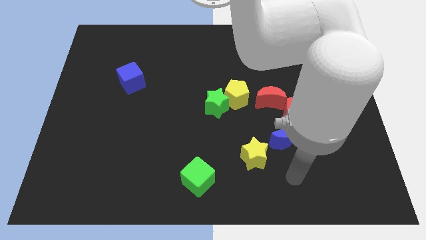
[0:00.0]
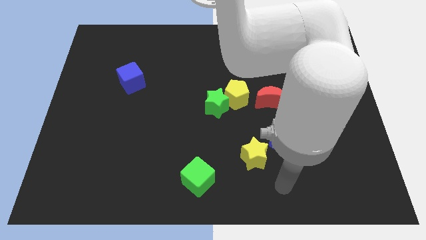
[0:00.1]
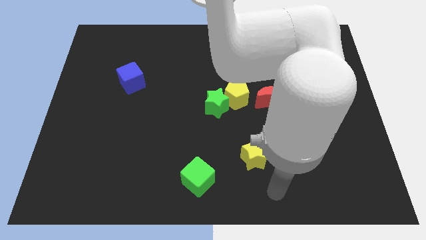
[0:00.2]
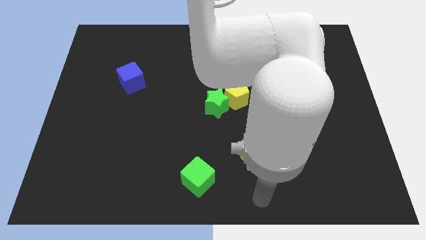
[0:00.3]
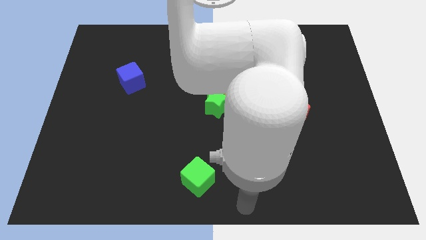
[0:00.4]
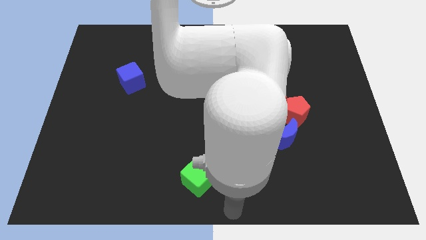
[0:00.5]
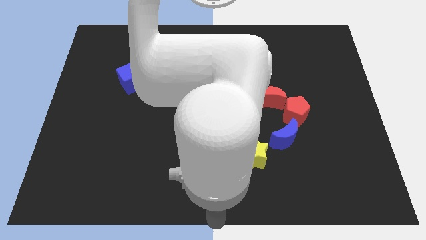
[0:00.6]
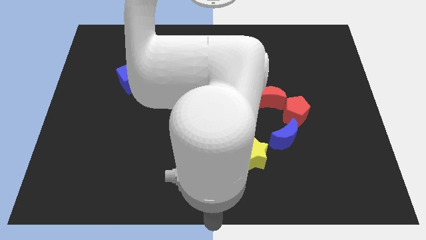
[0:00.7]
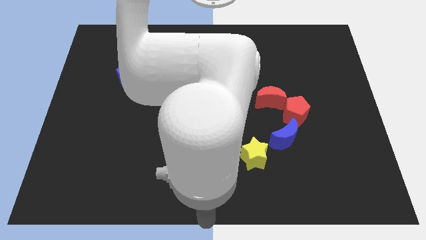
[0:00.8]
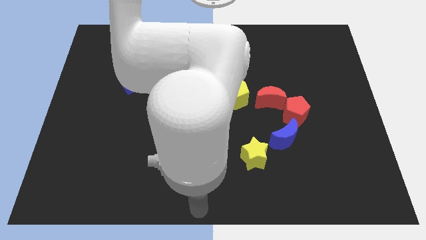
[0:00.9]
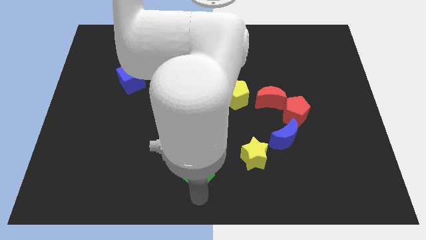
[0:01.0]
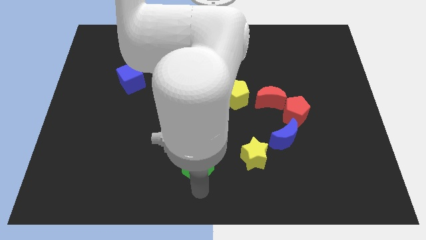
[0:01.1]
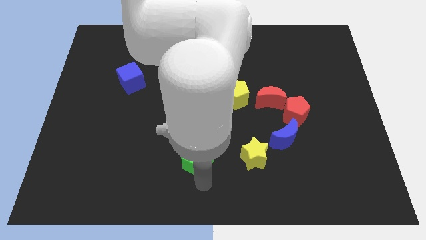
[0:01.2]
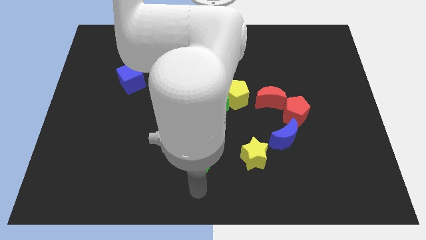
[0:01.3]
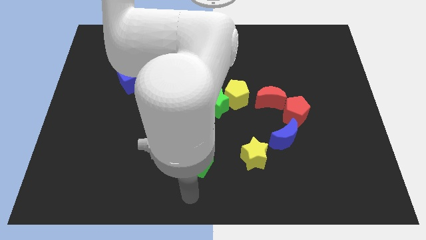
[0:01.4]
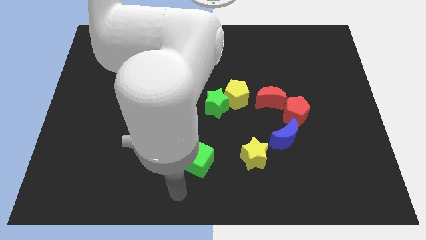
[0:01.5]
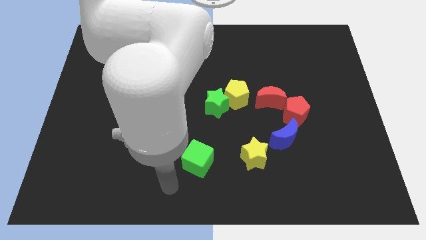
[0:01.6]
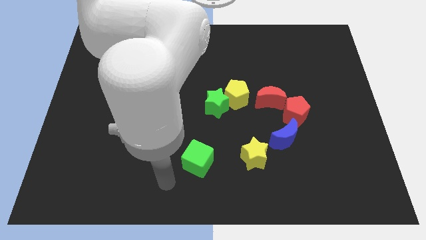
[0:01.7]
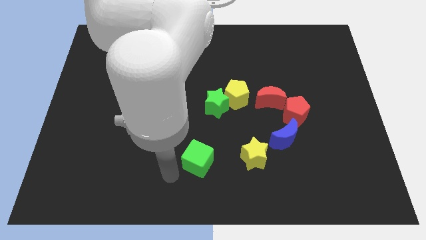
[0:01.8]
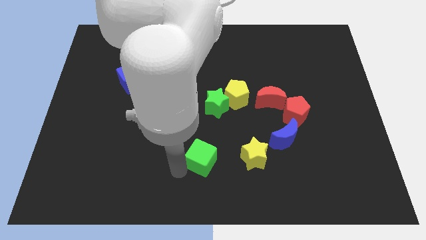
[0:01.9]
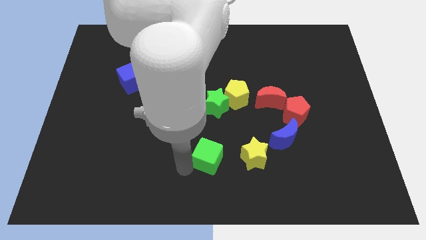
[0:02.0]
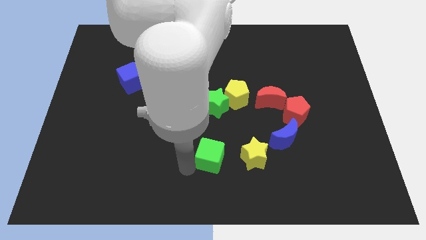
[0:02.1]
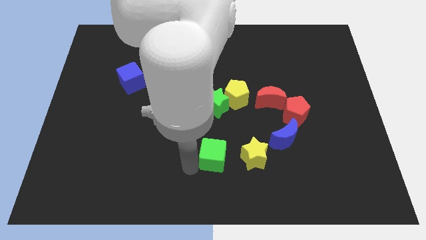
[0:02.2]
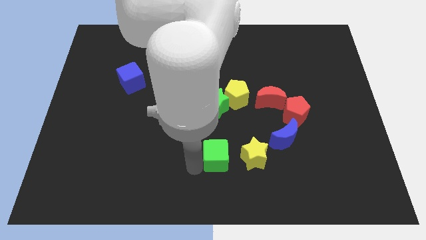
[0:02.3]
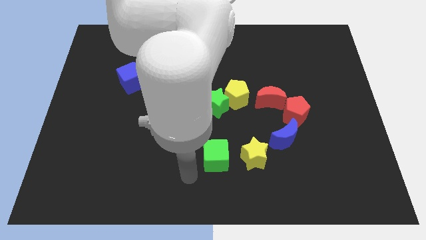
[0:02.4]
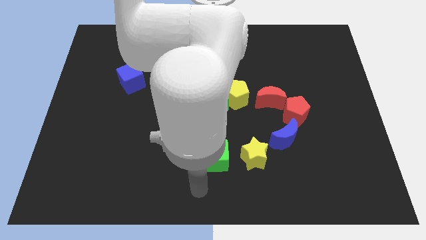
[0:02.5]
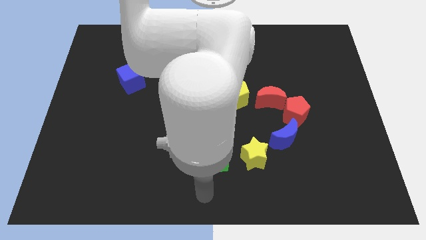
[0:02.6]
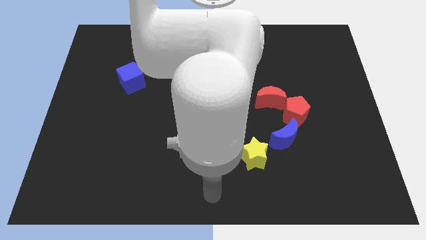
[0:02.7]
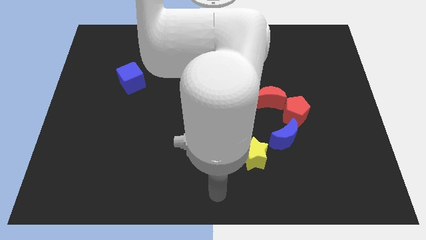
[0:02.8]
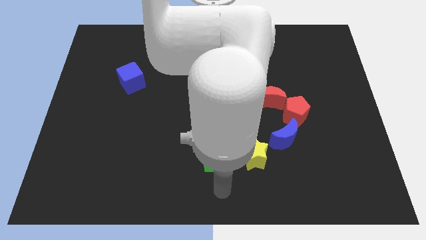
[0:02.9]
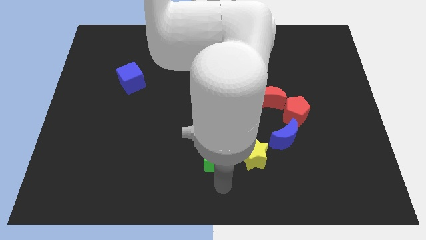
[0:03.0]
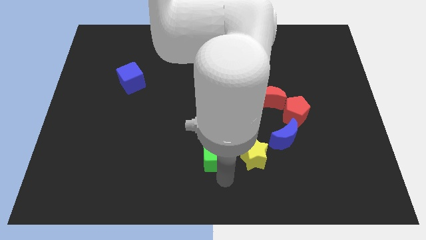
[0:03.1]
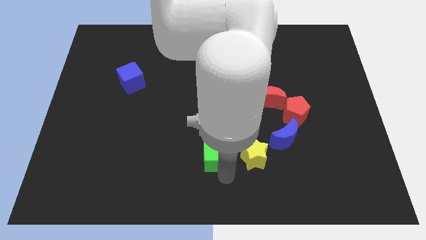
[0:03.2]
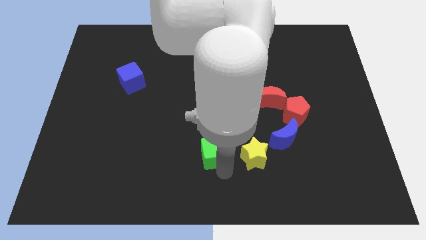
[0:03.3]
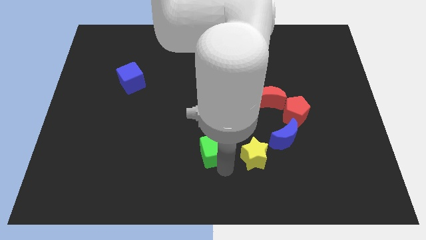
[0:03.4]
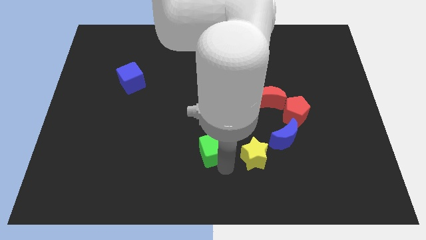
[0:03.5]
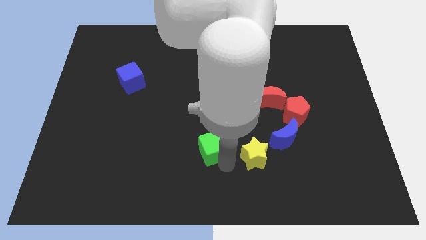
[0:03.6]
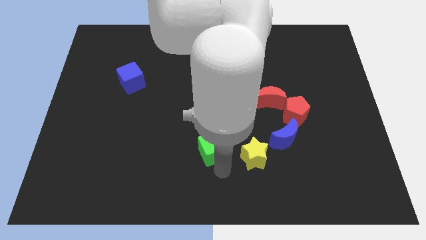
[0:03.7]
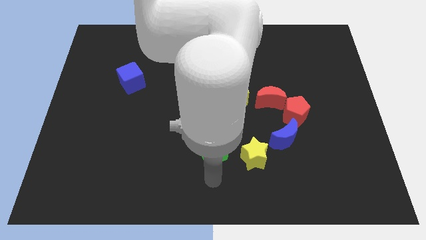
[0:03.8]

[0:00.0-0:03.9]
push the green cube left to the yellow star

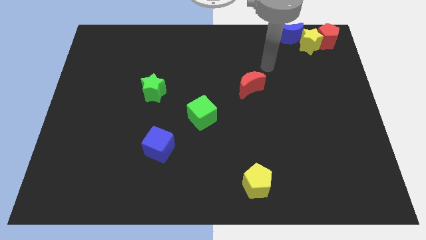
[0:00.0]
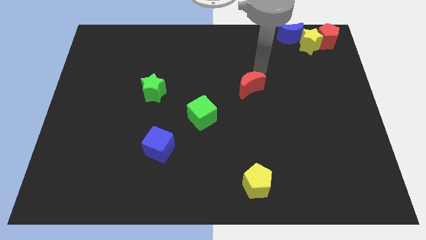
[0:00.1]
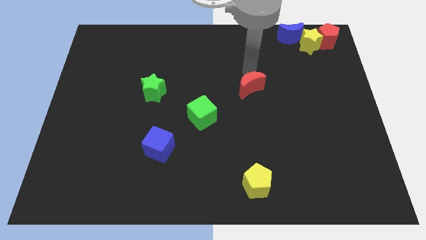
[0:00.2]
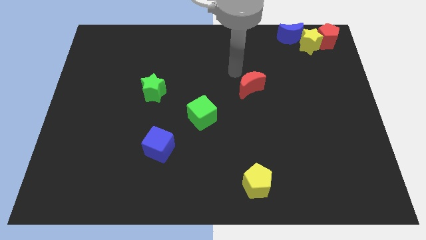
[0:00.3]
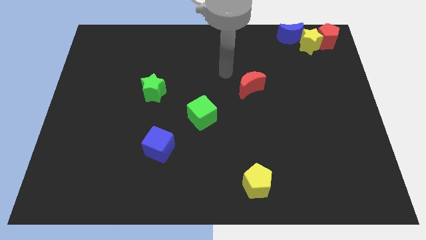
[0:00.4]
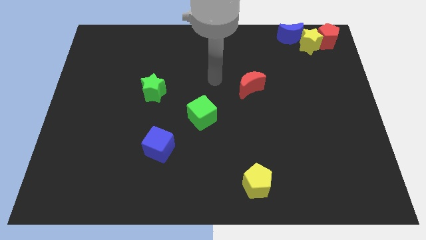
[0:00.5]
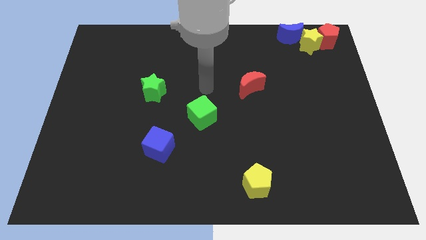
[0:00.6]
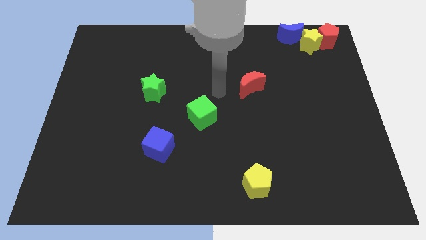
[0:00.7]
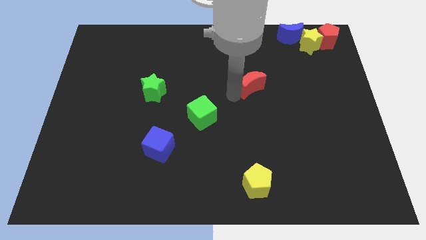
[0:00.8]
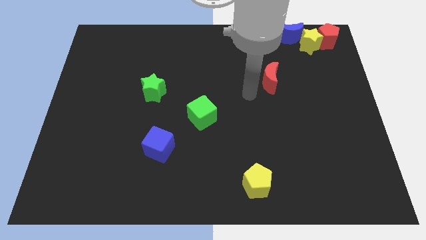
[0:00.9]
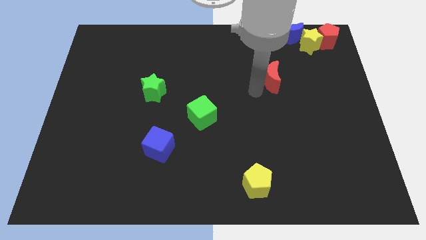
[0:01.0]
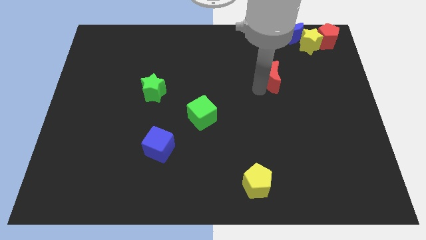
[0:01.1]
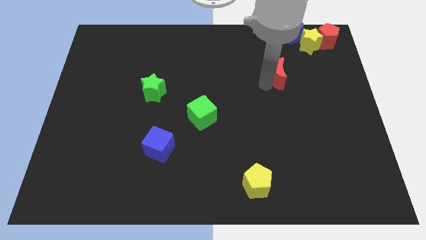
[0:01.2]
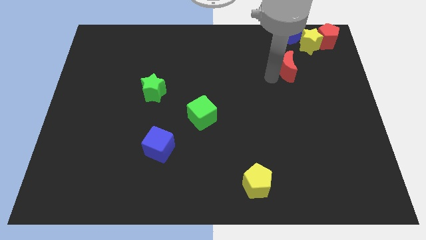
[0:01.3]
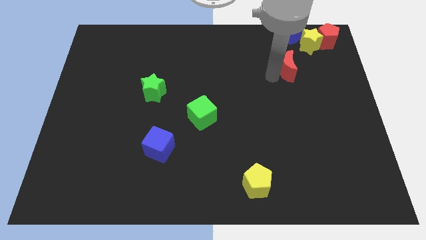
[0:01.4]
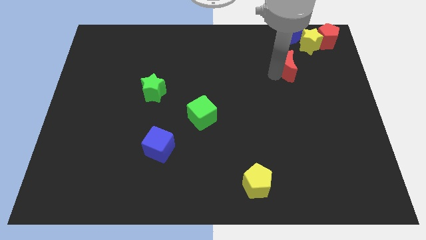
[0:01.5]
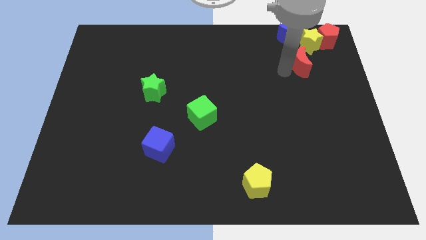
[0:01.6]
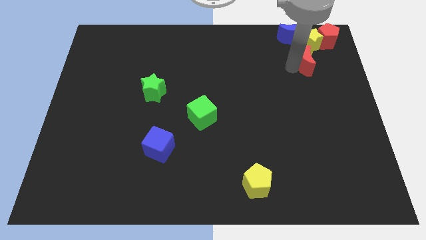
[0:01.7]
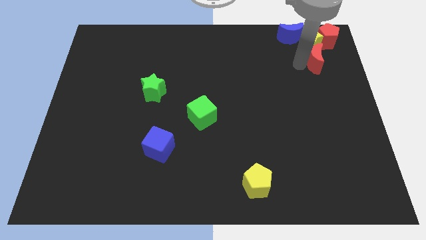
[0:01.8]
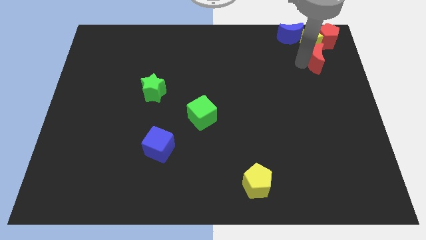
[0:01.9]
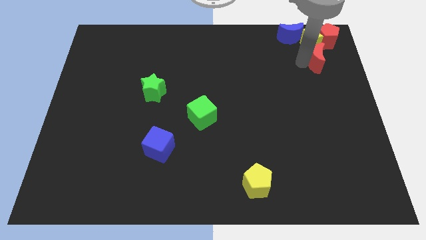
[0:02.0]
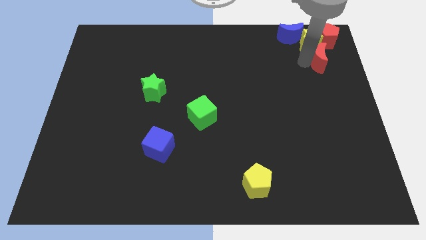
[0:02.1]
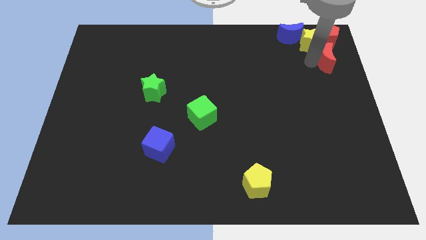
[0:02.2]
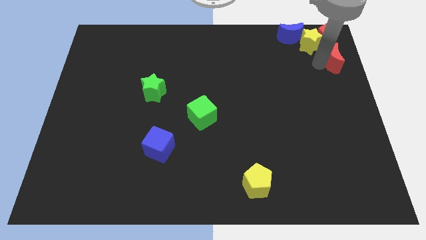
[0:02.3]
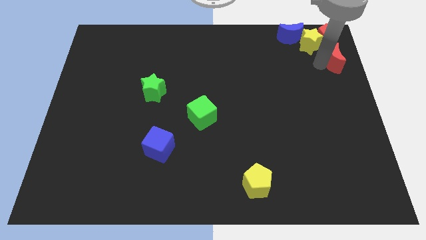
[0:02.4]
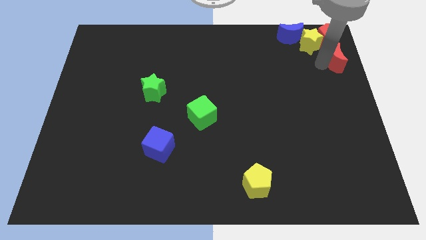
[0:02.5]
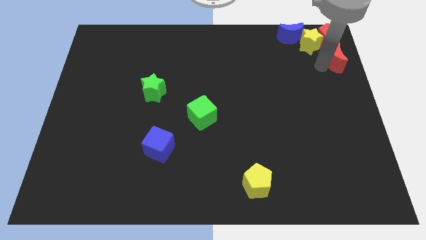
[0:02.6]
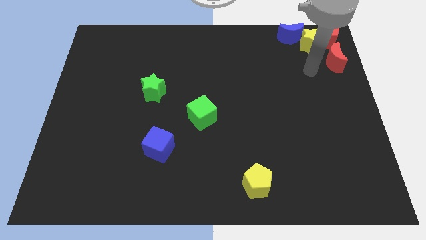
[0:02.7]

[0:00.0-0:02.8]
place red crescent below red pentagon

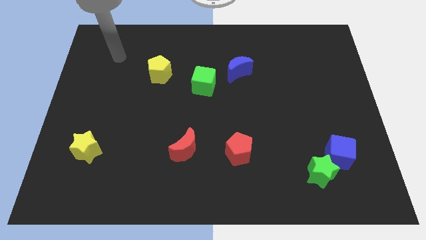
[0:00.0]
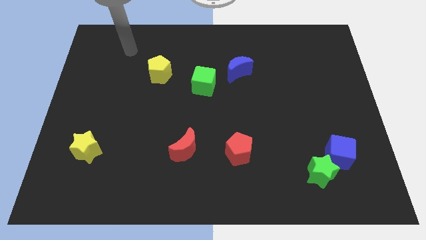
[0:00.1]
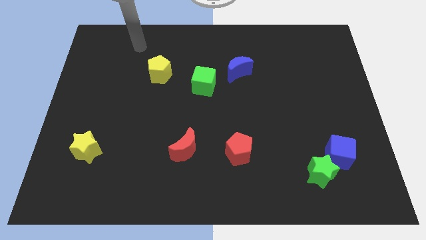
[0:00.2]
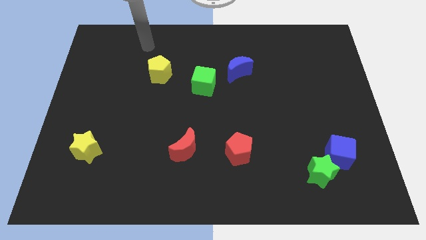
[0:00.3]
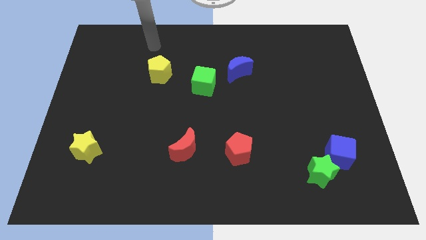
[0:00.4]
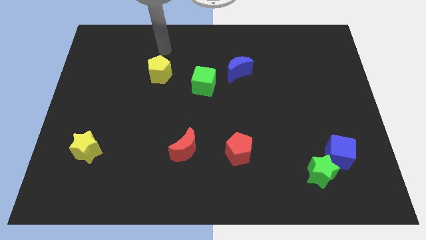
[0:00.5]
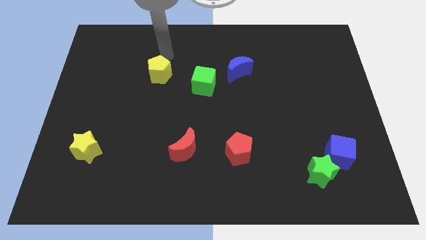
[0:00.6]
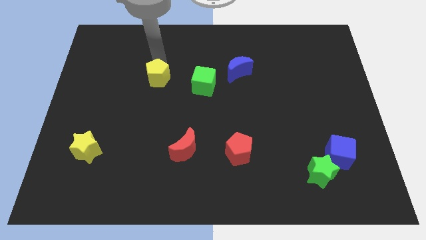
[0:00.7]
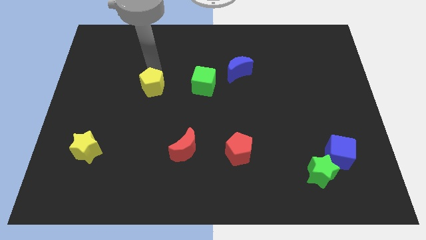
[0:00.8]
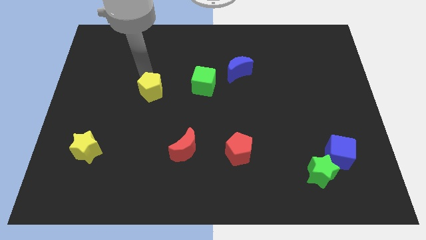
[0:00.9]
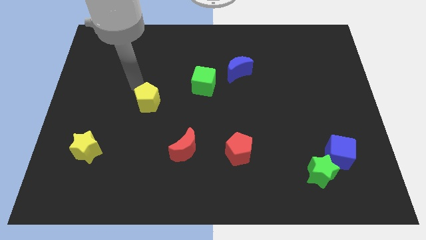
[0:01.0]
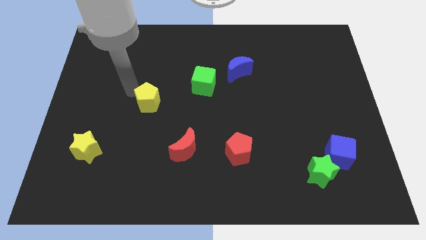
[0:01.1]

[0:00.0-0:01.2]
move the yellow pentagon slightly down

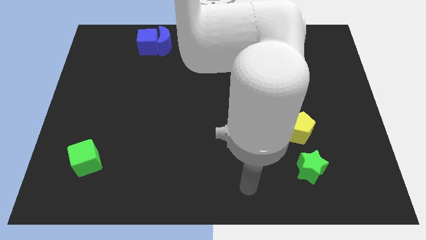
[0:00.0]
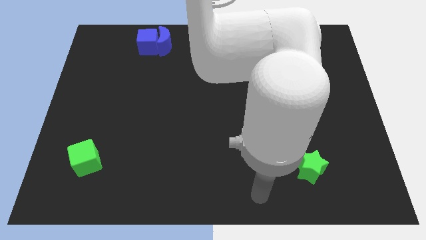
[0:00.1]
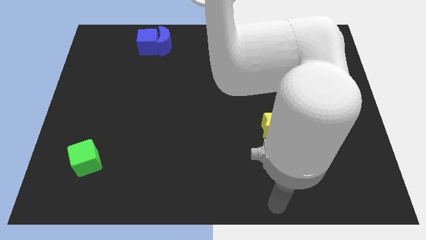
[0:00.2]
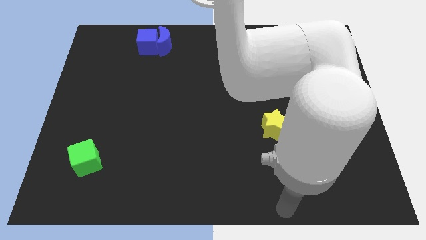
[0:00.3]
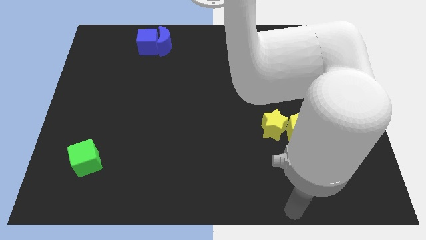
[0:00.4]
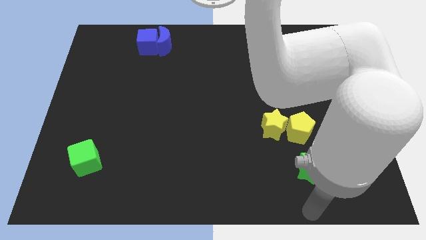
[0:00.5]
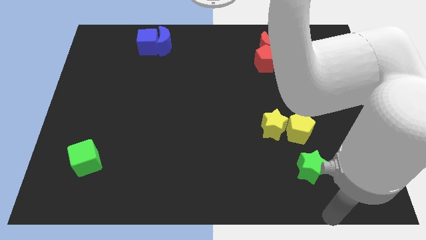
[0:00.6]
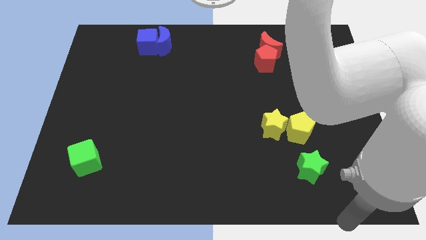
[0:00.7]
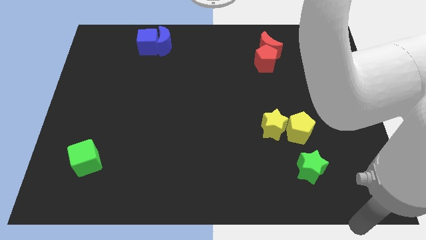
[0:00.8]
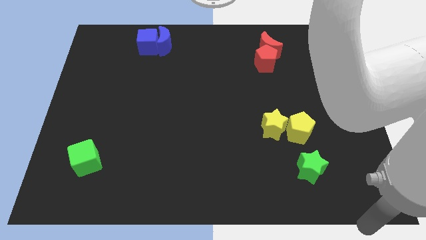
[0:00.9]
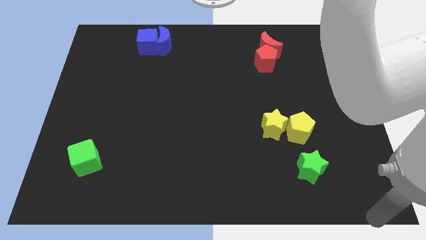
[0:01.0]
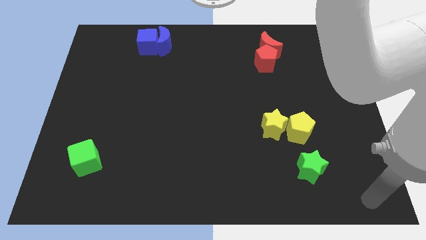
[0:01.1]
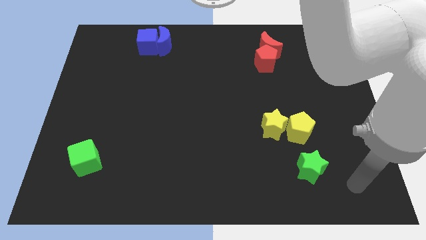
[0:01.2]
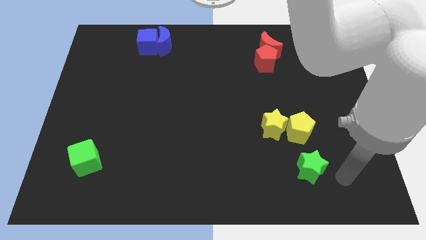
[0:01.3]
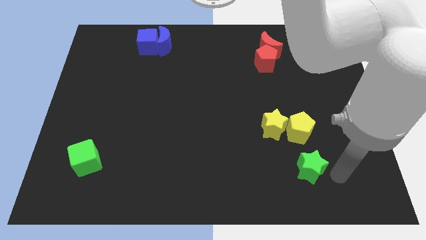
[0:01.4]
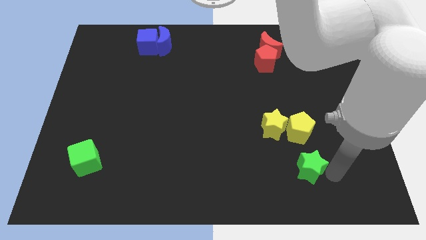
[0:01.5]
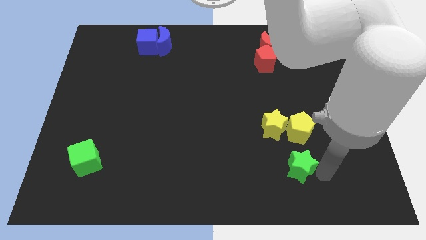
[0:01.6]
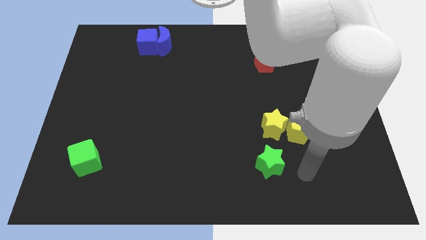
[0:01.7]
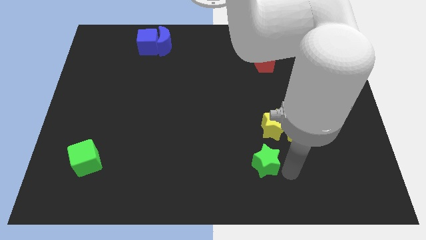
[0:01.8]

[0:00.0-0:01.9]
move the green star to the bottom side of the yellow star
